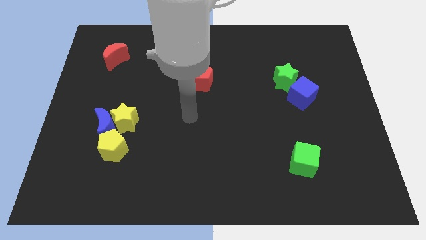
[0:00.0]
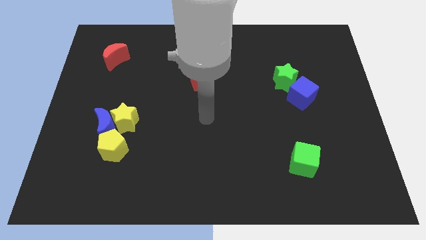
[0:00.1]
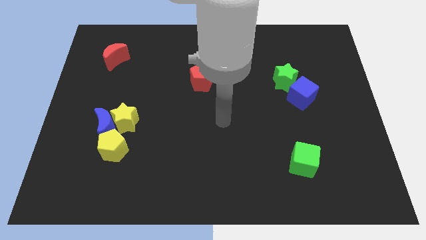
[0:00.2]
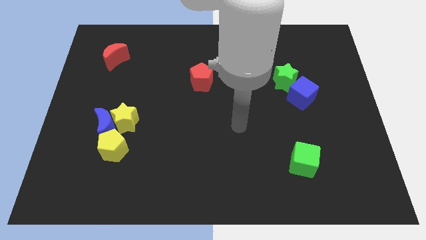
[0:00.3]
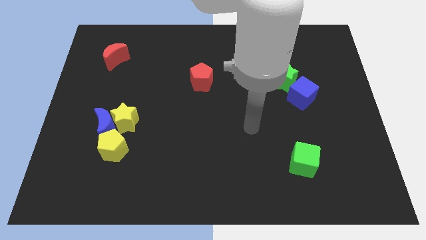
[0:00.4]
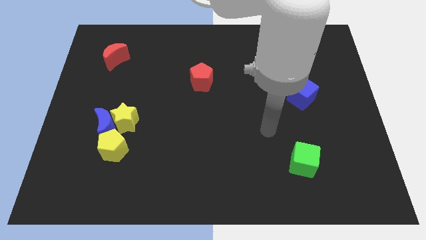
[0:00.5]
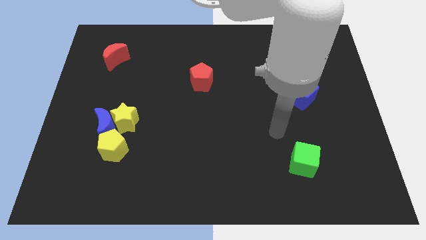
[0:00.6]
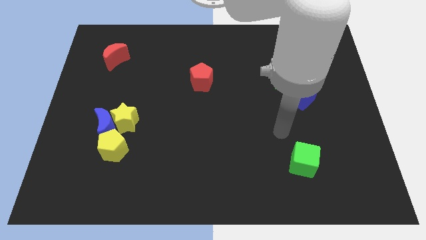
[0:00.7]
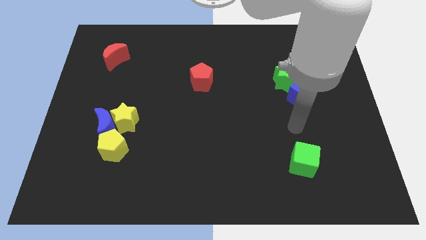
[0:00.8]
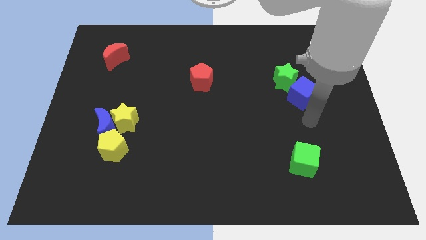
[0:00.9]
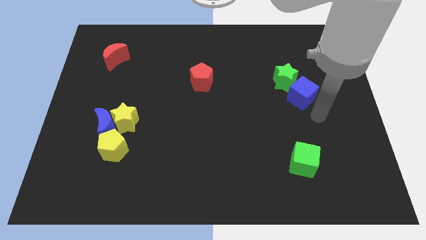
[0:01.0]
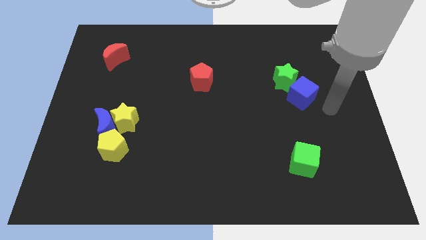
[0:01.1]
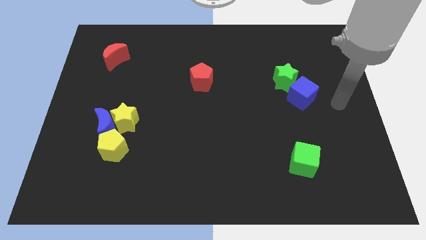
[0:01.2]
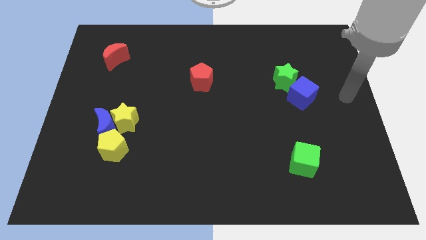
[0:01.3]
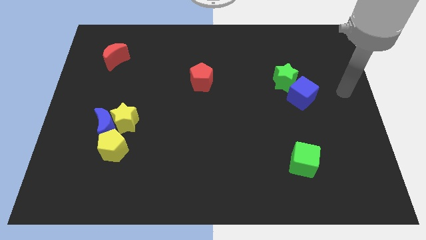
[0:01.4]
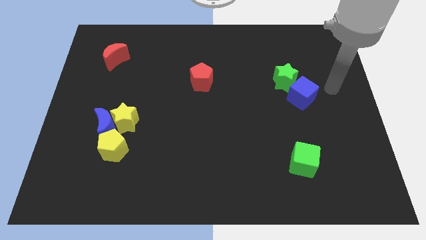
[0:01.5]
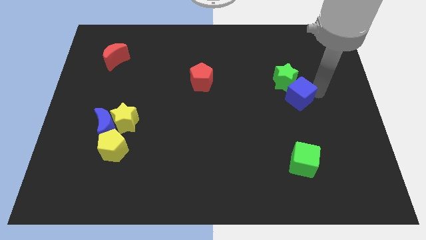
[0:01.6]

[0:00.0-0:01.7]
place your arm to the right of the blue cube

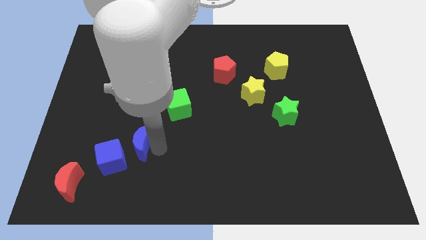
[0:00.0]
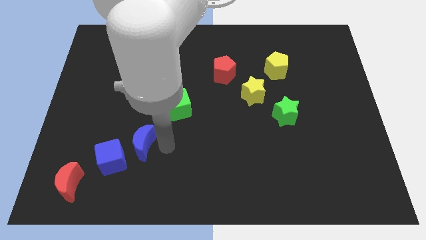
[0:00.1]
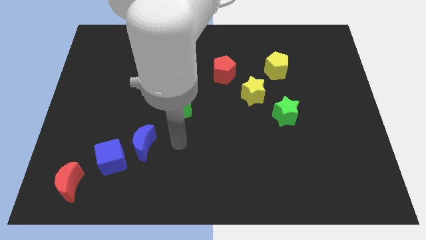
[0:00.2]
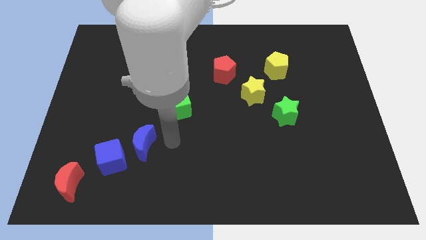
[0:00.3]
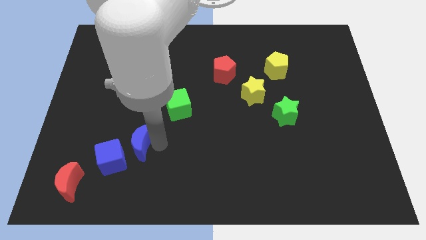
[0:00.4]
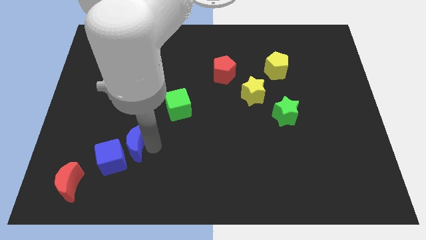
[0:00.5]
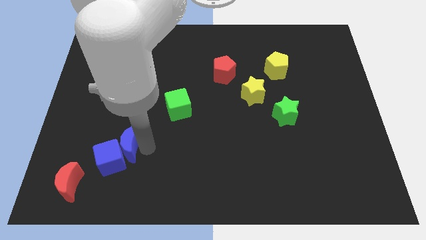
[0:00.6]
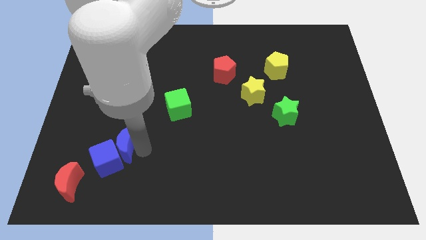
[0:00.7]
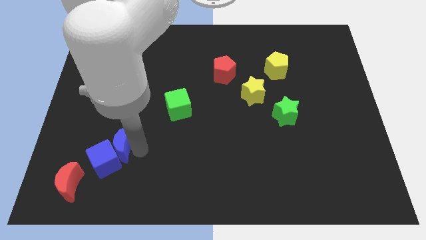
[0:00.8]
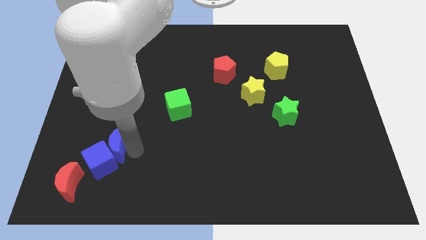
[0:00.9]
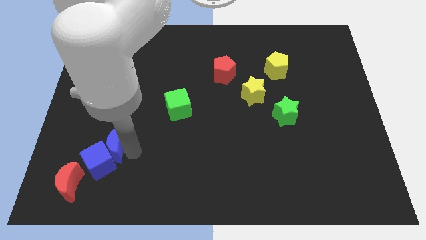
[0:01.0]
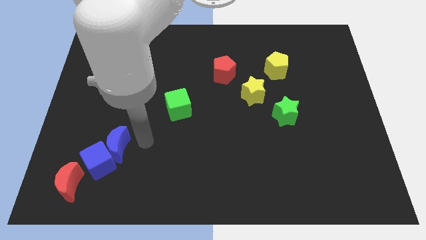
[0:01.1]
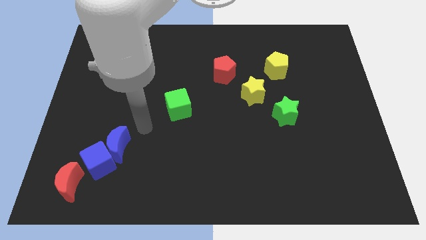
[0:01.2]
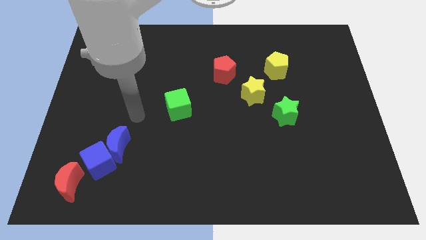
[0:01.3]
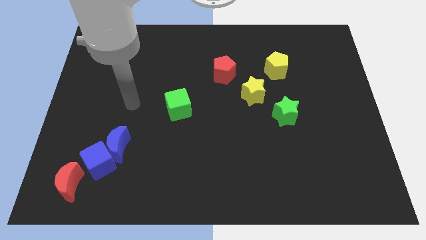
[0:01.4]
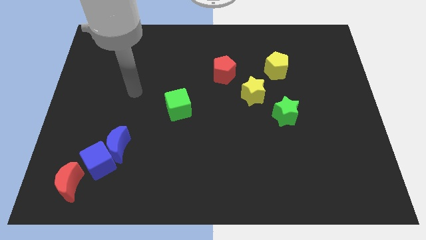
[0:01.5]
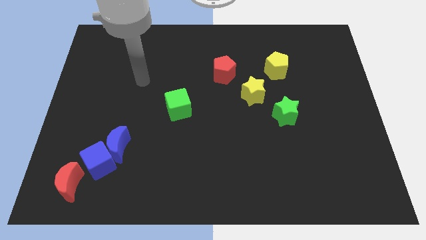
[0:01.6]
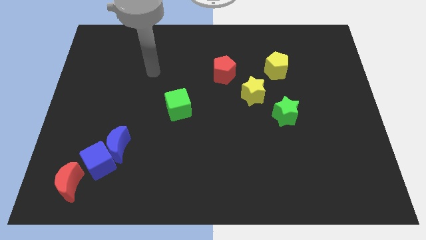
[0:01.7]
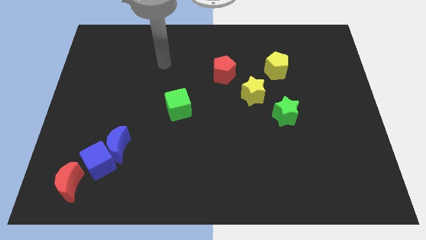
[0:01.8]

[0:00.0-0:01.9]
place both the blue blocks at the top right side of the red crescent

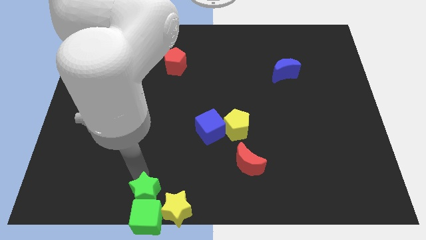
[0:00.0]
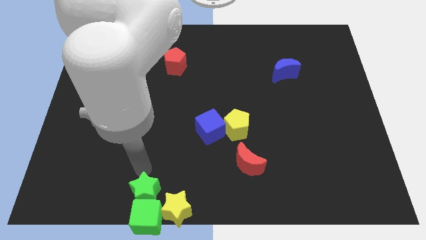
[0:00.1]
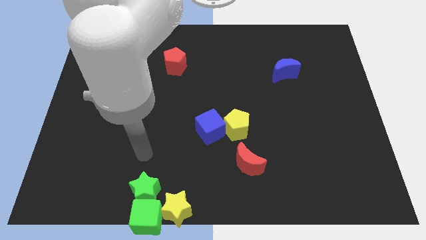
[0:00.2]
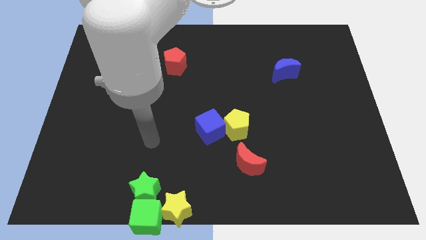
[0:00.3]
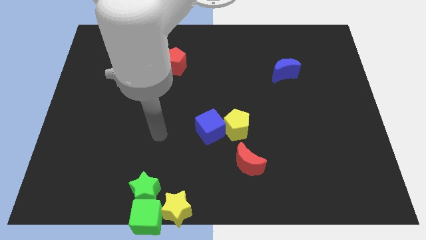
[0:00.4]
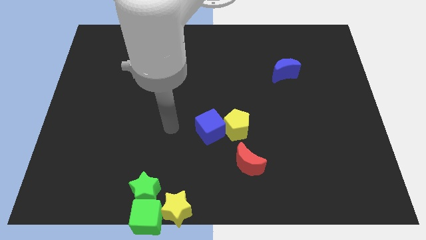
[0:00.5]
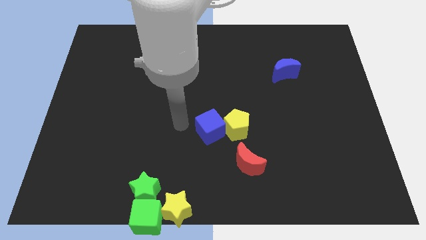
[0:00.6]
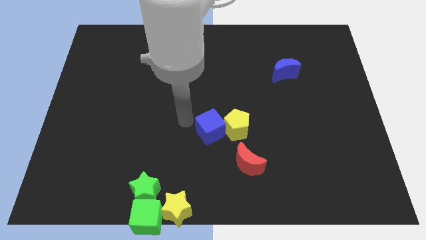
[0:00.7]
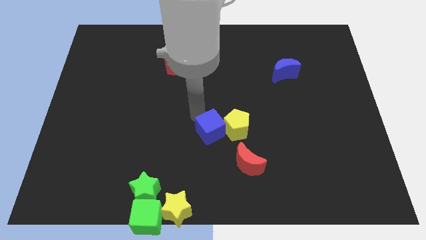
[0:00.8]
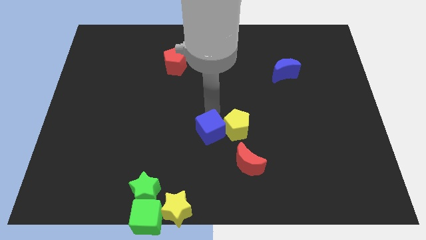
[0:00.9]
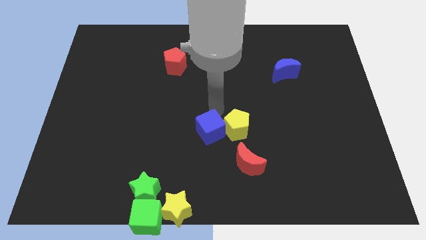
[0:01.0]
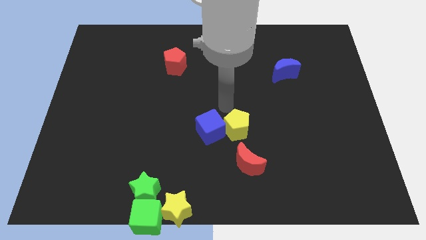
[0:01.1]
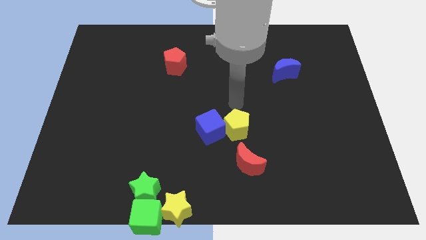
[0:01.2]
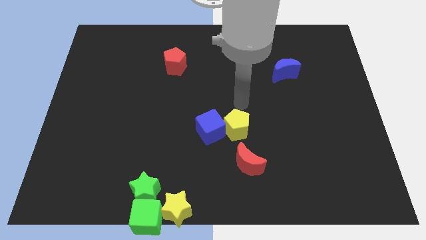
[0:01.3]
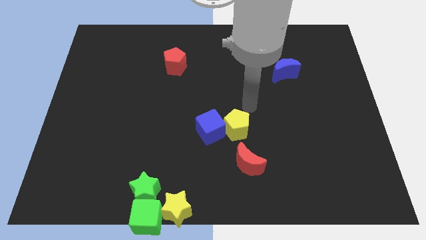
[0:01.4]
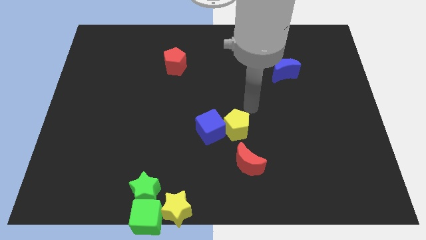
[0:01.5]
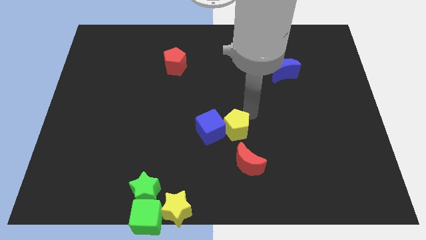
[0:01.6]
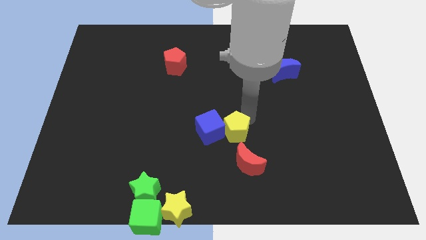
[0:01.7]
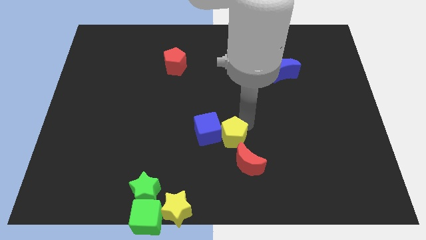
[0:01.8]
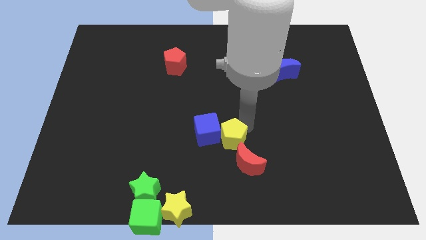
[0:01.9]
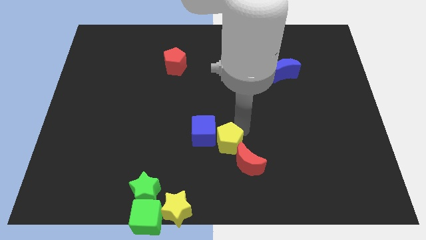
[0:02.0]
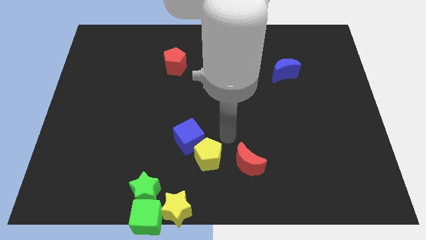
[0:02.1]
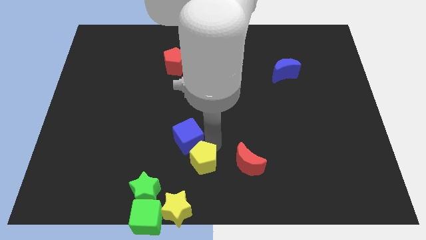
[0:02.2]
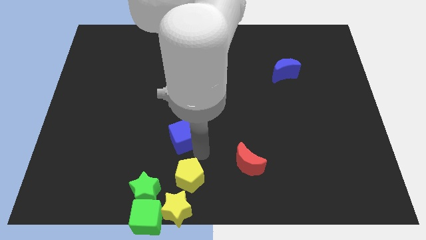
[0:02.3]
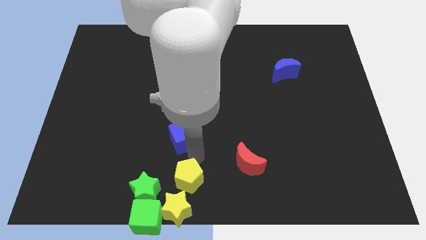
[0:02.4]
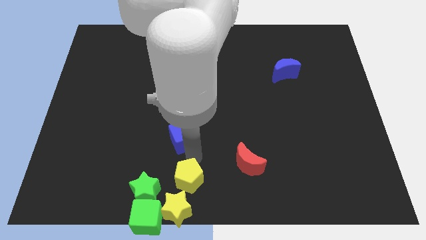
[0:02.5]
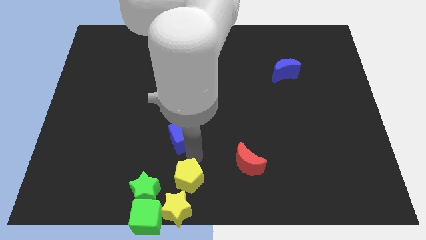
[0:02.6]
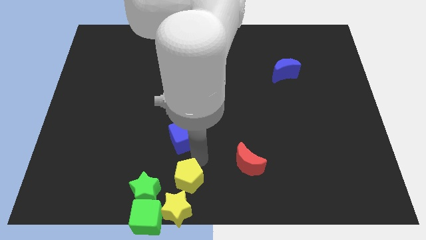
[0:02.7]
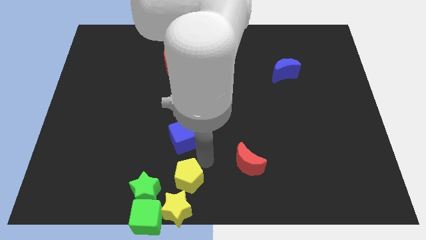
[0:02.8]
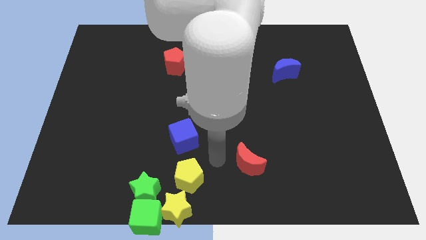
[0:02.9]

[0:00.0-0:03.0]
move the yellow pentagon above the yellow star

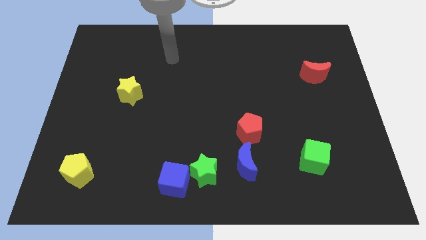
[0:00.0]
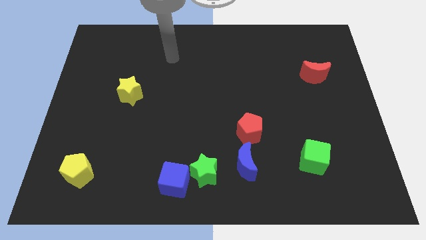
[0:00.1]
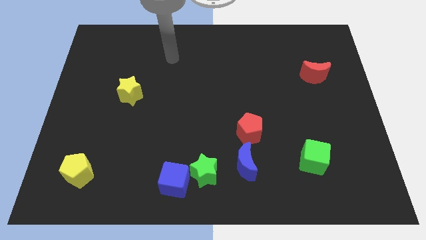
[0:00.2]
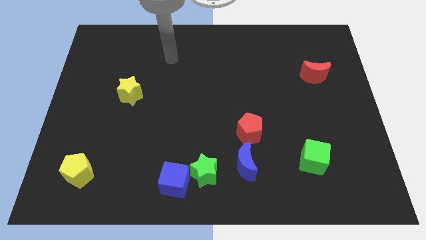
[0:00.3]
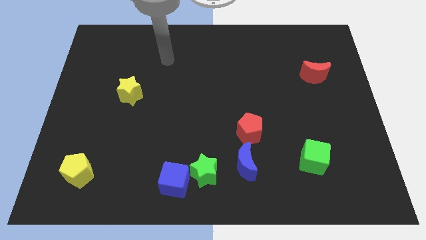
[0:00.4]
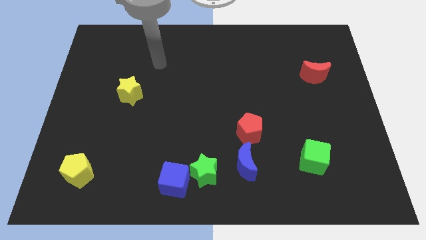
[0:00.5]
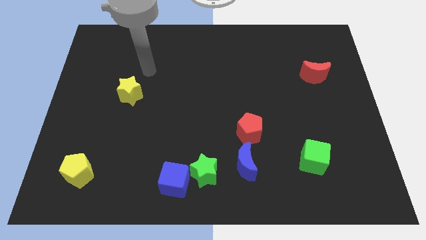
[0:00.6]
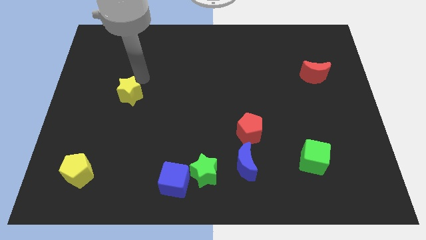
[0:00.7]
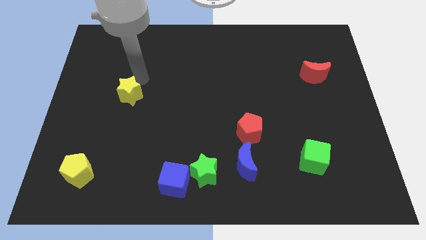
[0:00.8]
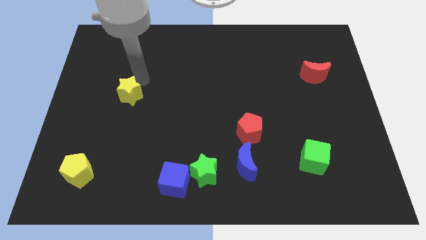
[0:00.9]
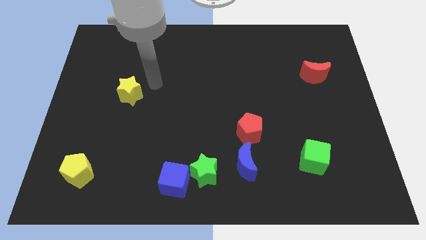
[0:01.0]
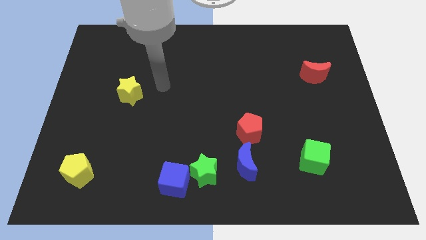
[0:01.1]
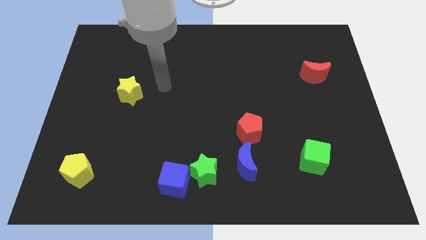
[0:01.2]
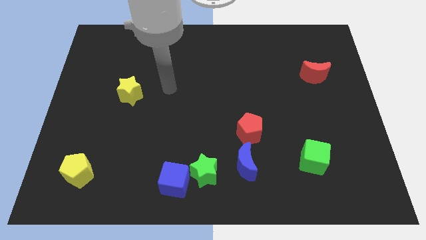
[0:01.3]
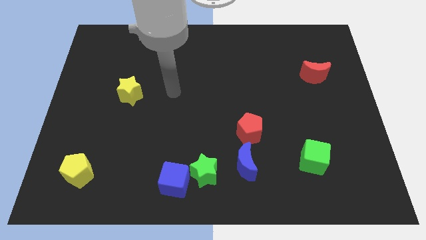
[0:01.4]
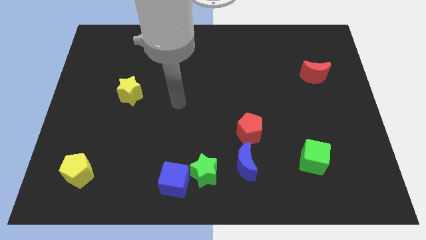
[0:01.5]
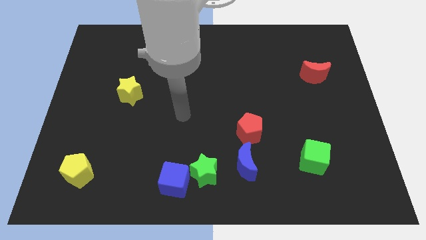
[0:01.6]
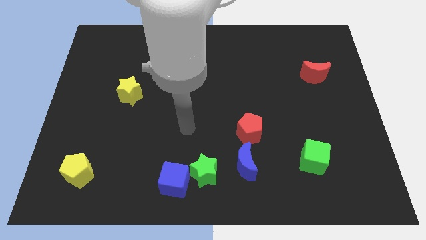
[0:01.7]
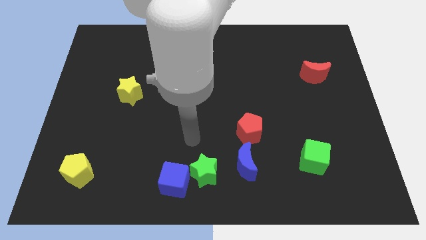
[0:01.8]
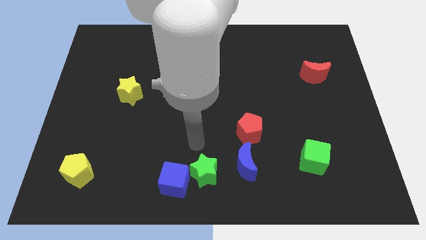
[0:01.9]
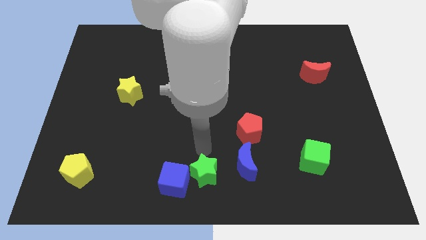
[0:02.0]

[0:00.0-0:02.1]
move your arm towards the green star

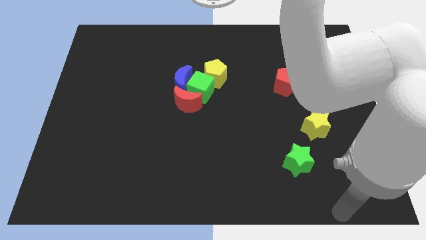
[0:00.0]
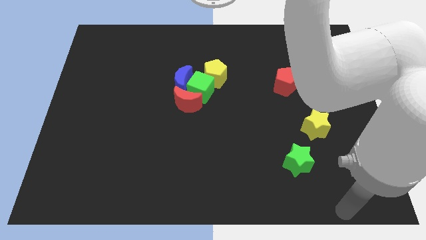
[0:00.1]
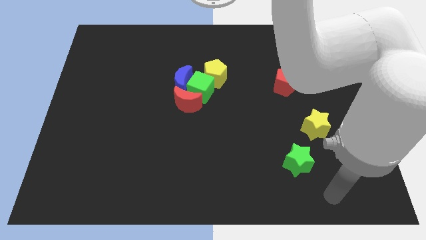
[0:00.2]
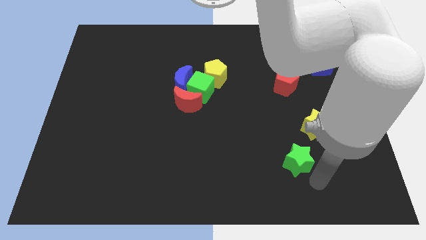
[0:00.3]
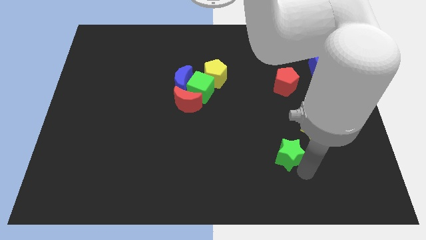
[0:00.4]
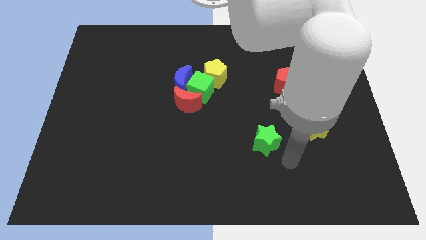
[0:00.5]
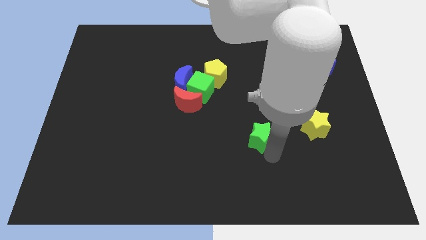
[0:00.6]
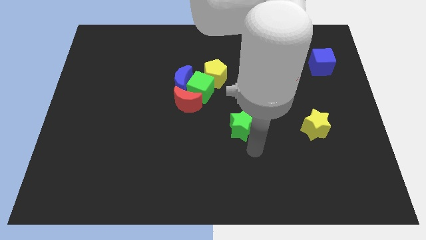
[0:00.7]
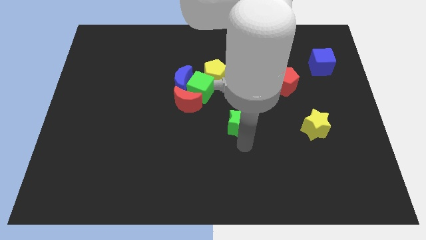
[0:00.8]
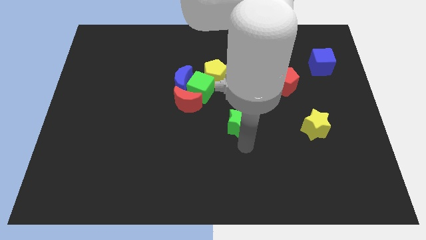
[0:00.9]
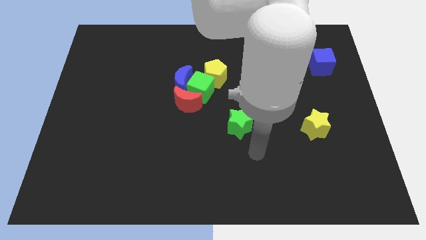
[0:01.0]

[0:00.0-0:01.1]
push the green star upward
